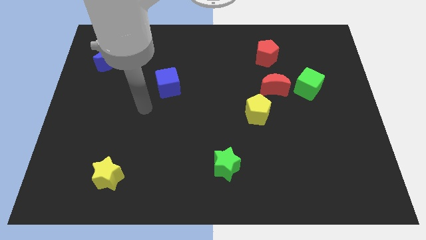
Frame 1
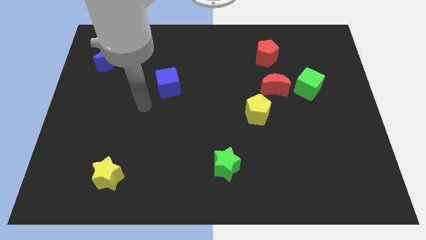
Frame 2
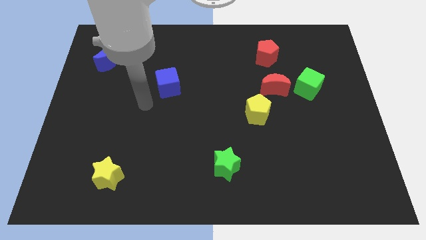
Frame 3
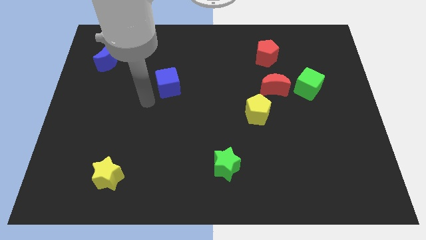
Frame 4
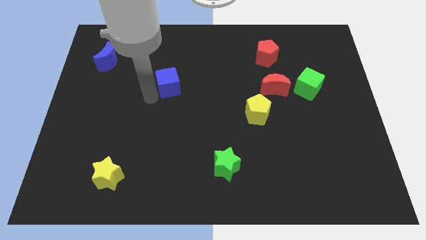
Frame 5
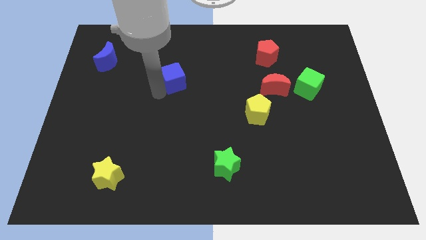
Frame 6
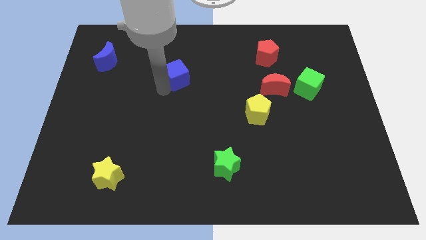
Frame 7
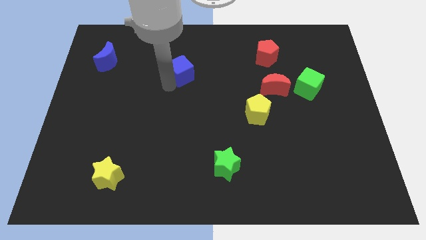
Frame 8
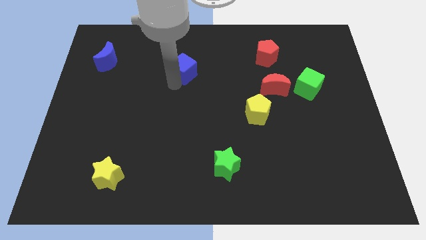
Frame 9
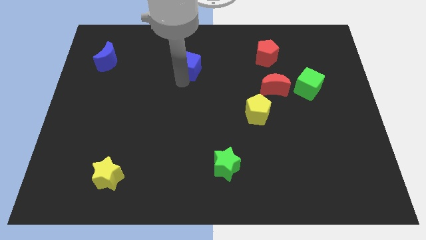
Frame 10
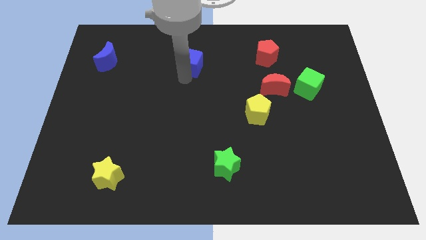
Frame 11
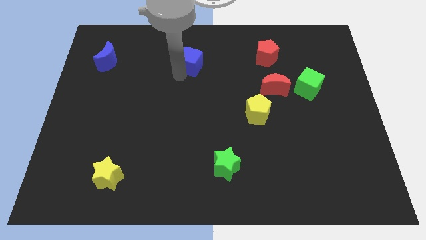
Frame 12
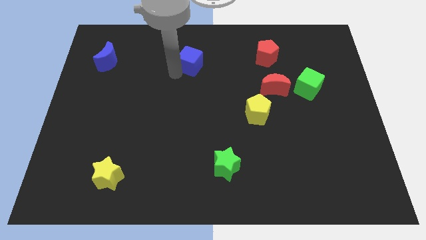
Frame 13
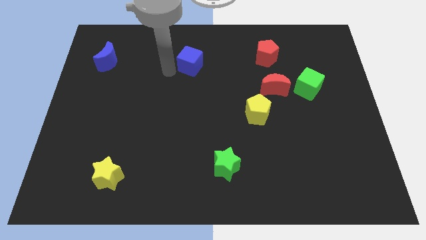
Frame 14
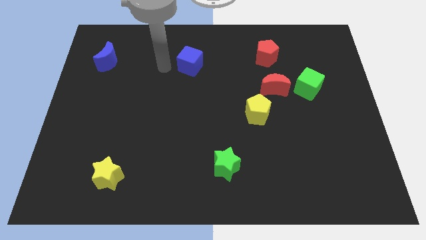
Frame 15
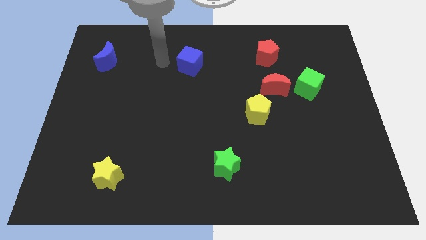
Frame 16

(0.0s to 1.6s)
move the blue cube slightly up

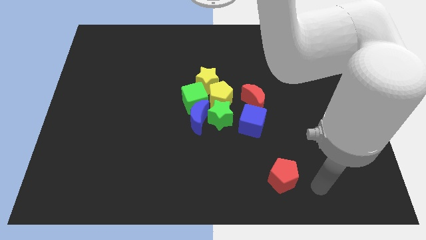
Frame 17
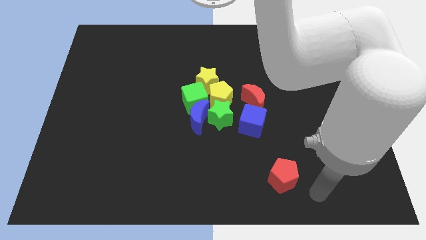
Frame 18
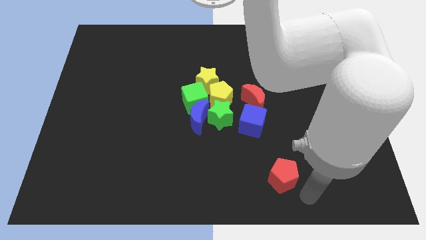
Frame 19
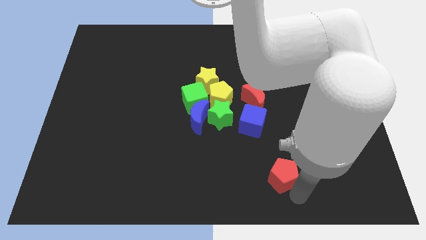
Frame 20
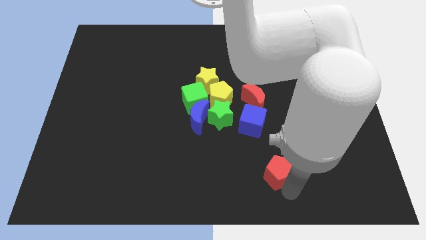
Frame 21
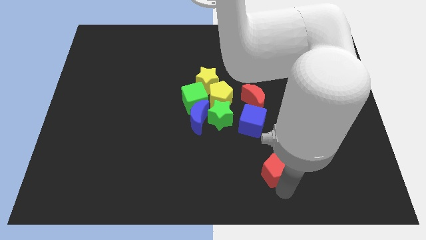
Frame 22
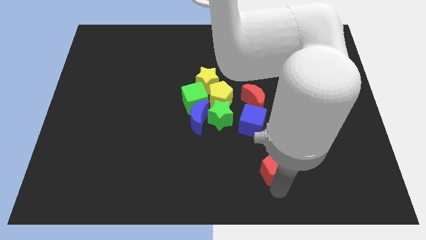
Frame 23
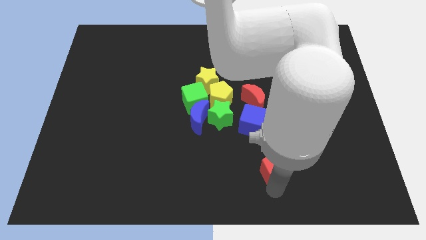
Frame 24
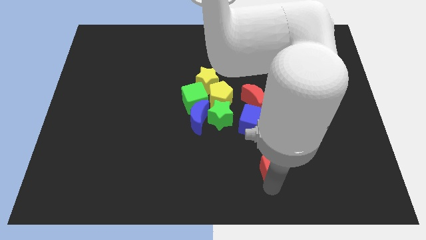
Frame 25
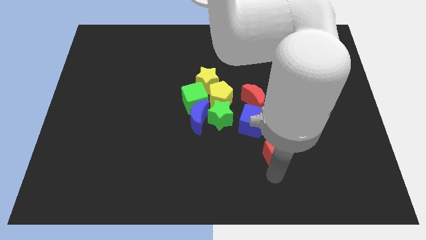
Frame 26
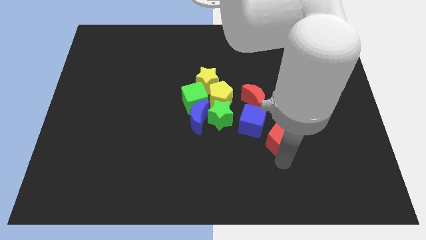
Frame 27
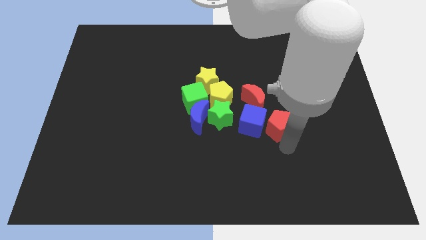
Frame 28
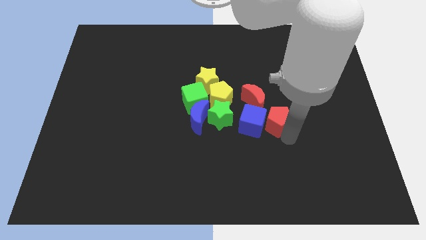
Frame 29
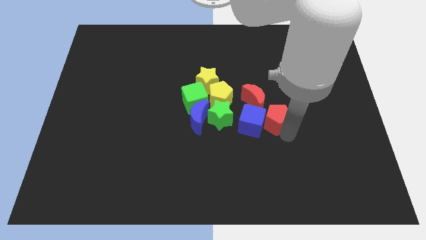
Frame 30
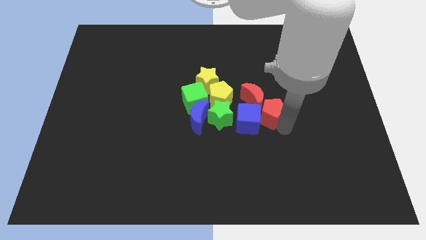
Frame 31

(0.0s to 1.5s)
move the red pentagon to the right side of the blue cube

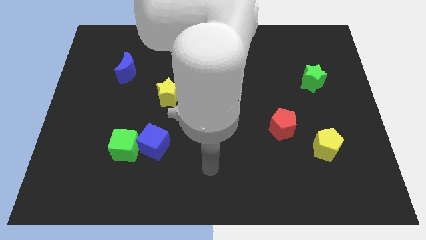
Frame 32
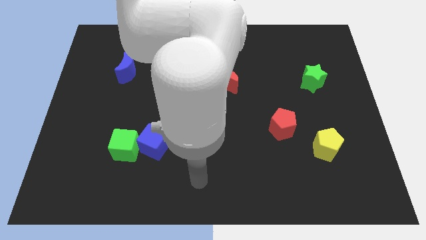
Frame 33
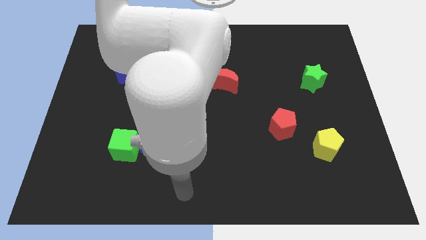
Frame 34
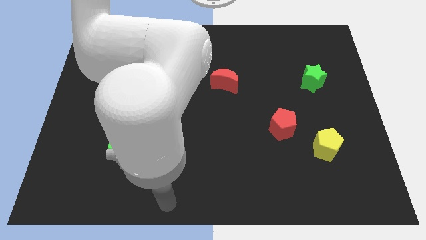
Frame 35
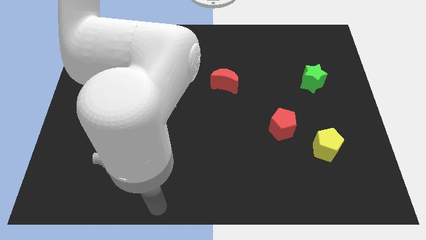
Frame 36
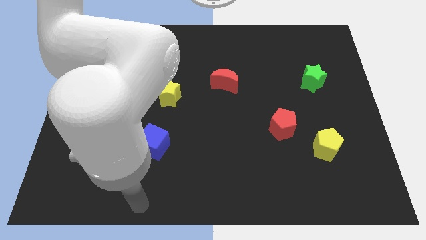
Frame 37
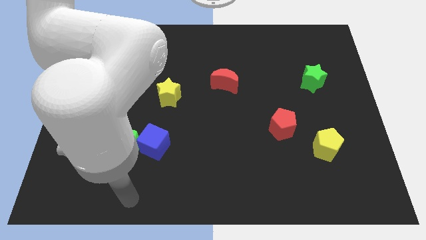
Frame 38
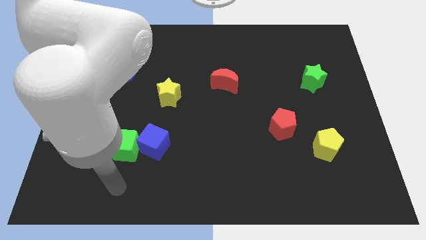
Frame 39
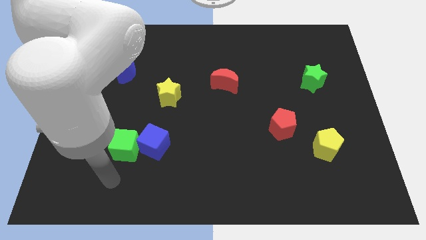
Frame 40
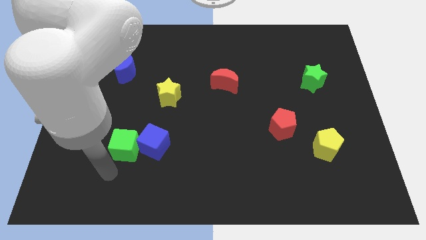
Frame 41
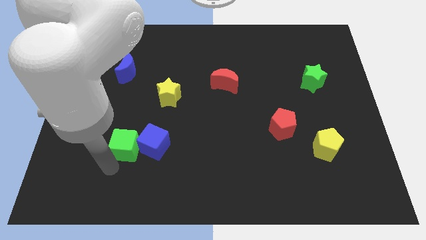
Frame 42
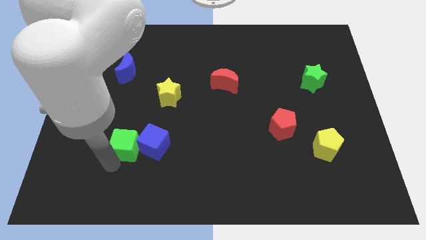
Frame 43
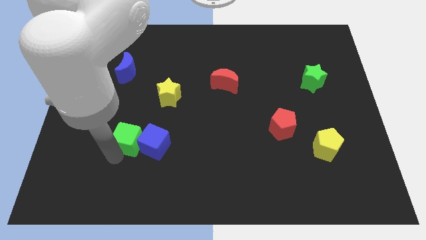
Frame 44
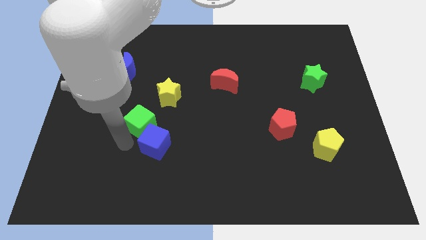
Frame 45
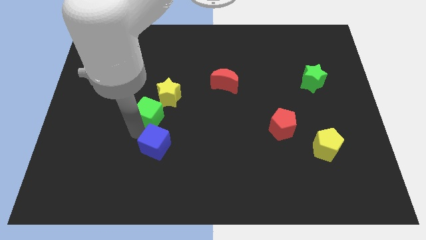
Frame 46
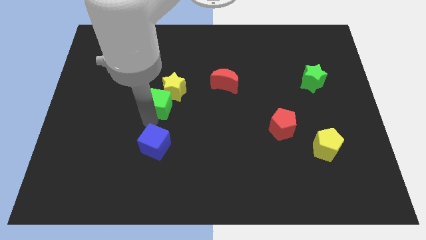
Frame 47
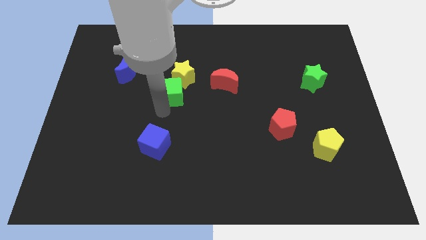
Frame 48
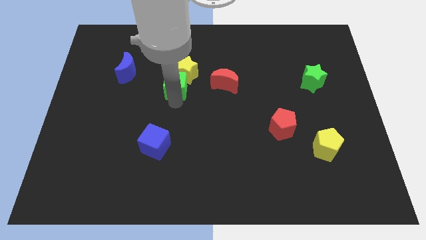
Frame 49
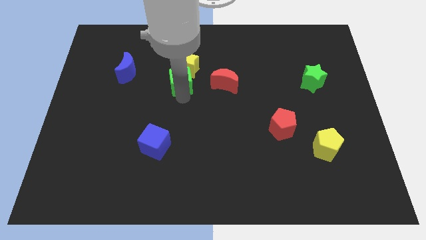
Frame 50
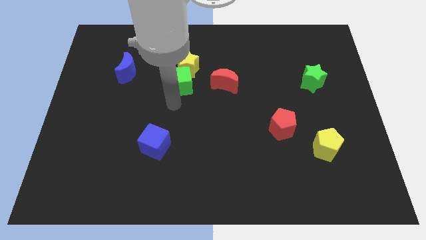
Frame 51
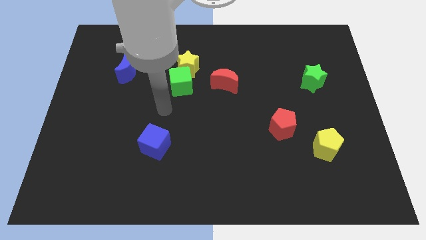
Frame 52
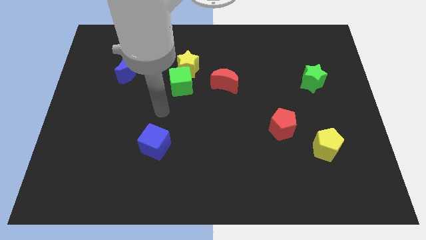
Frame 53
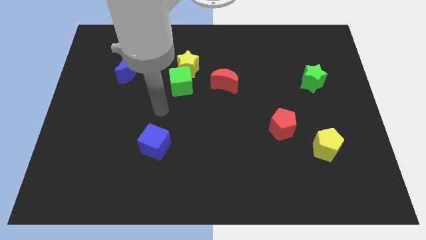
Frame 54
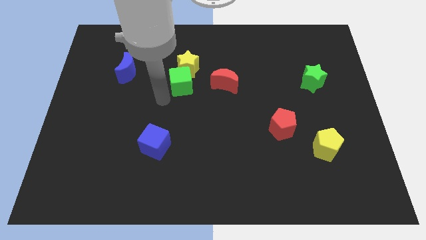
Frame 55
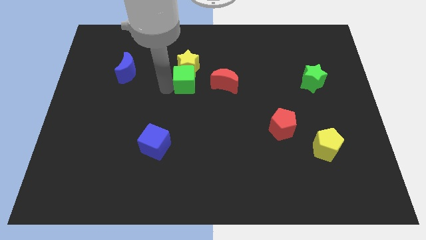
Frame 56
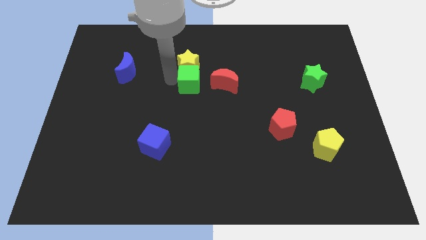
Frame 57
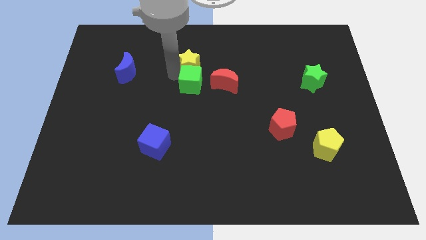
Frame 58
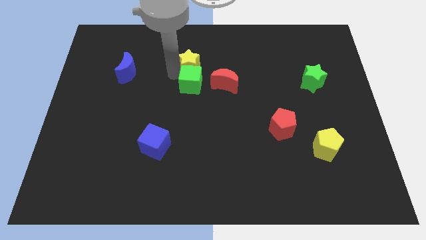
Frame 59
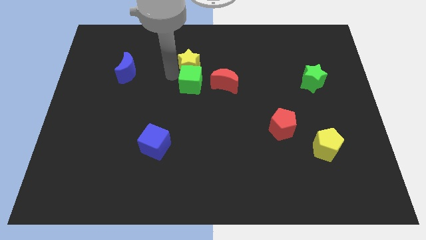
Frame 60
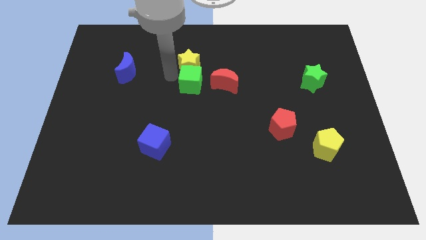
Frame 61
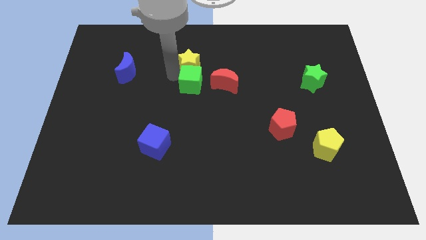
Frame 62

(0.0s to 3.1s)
push the yellow star towards the top center with green cube

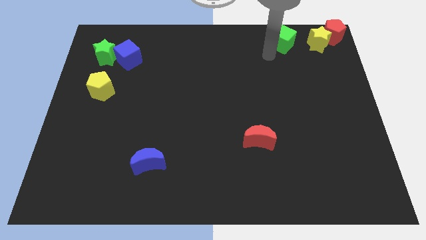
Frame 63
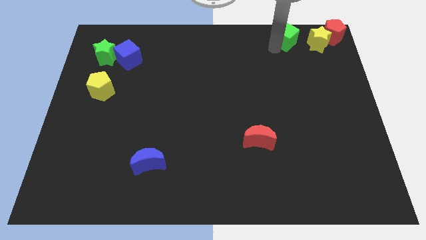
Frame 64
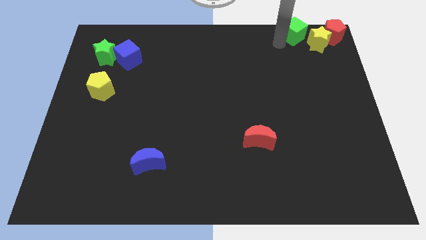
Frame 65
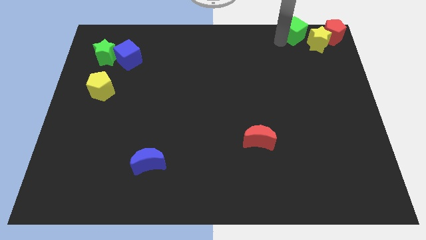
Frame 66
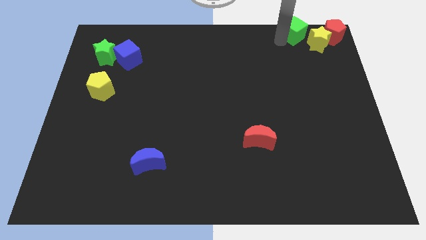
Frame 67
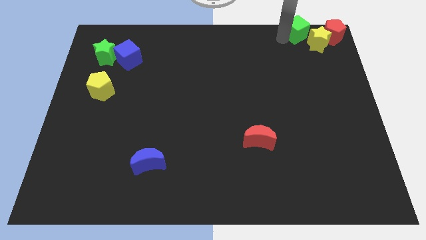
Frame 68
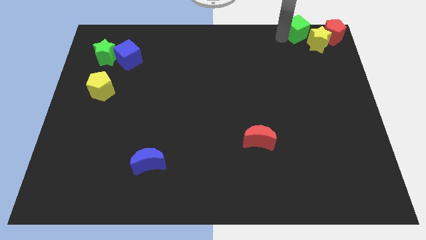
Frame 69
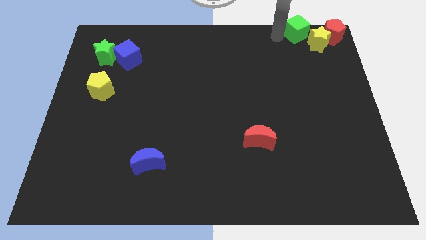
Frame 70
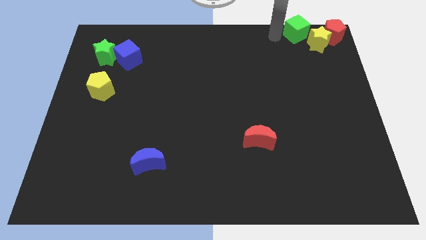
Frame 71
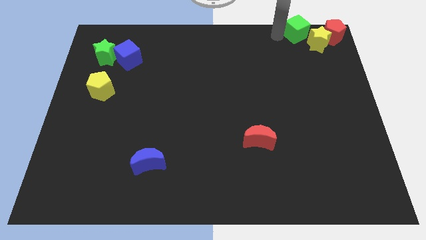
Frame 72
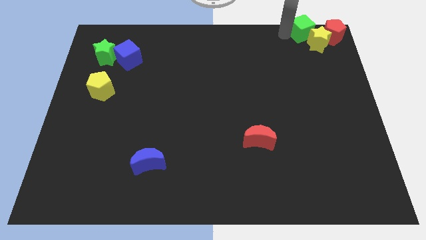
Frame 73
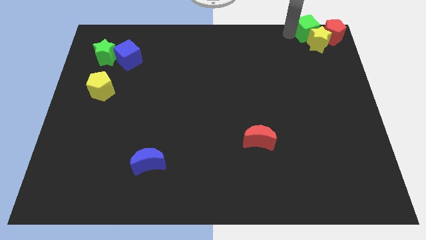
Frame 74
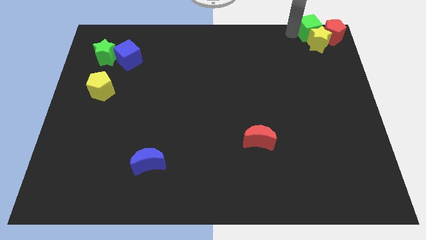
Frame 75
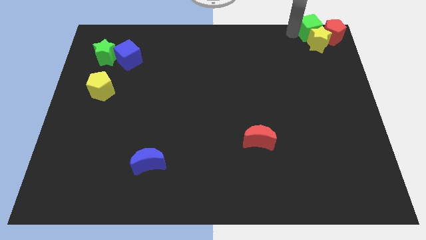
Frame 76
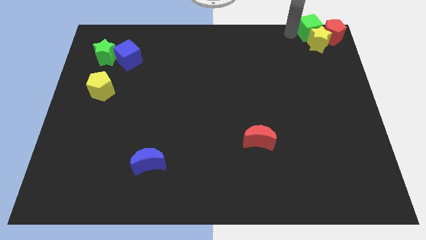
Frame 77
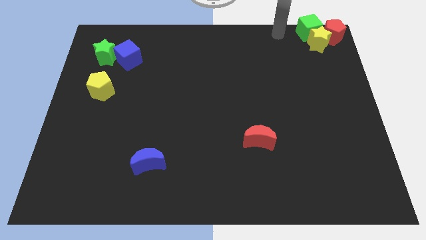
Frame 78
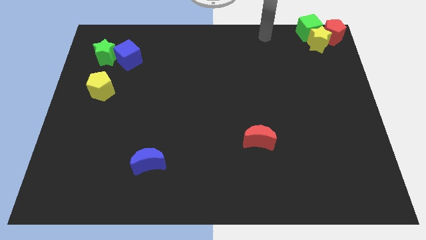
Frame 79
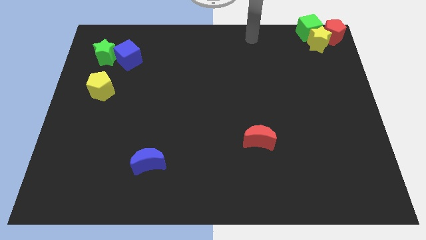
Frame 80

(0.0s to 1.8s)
put the green cube on the left side of the red pentagon

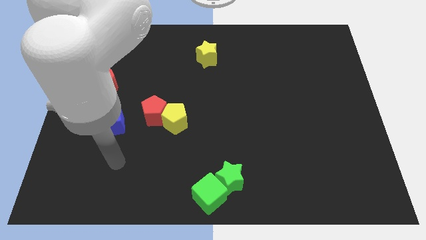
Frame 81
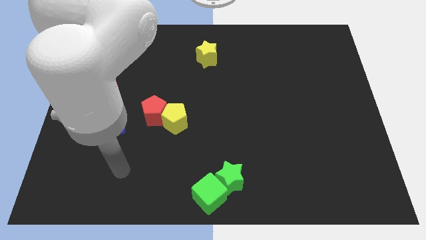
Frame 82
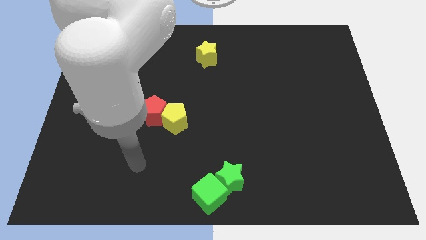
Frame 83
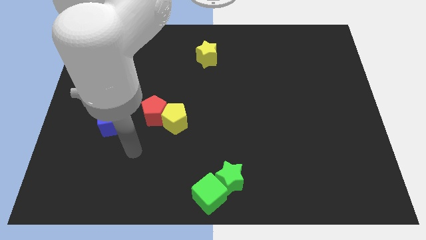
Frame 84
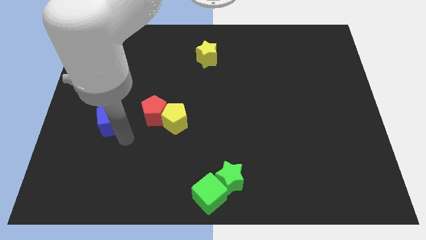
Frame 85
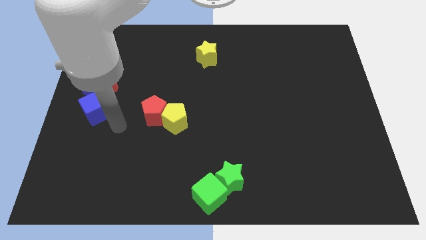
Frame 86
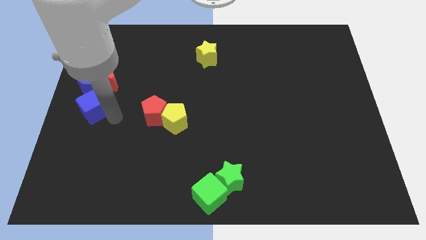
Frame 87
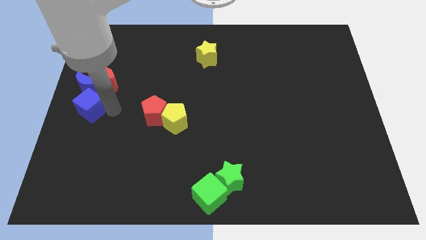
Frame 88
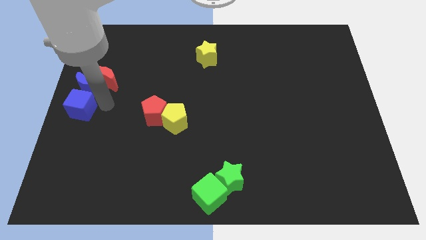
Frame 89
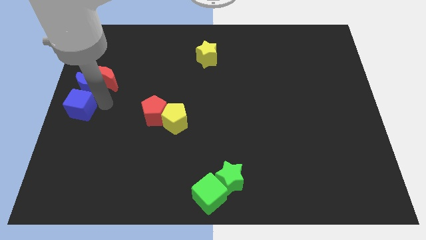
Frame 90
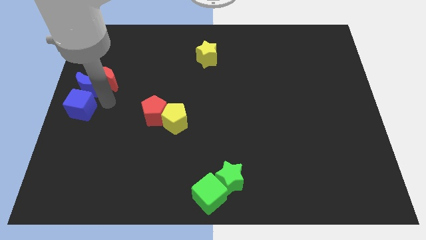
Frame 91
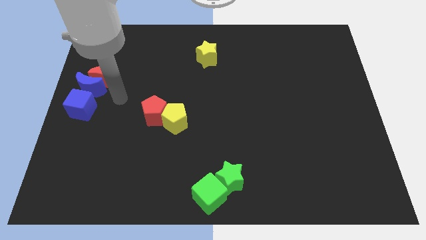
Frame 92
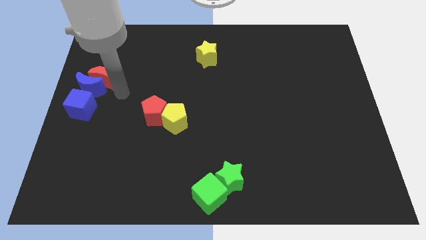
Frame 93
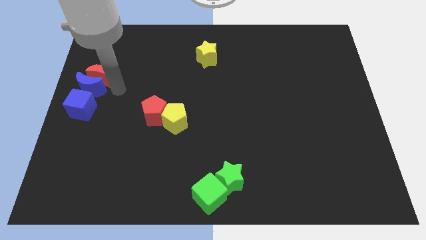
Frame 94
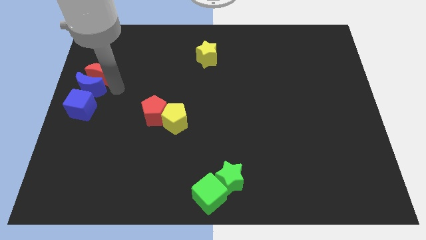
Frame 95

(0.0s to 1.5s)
push the blue cube to the bottom side of the blue moon
